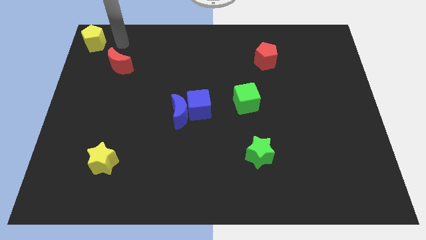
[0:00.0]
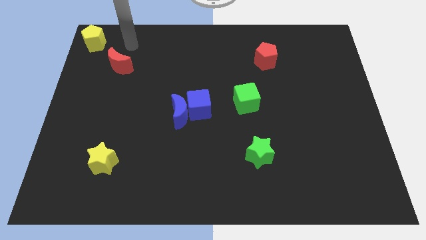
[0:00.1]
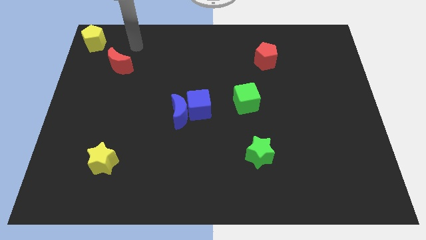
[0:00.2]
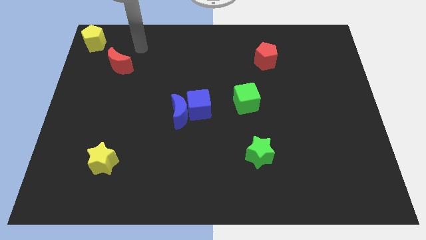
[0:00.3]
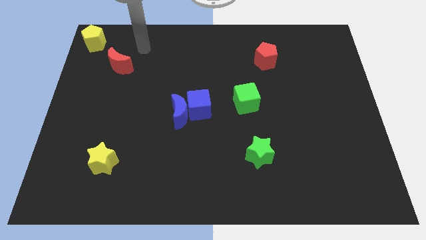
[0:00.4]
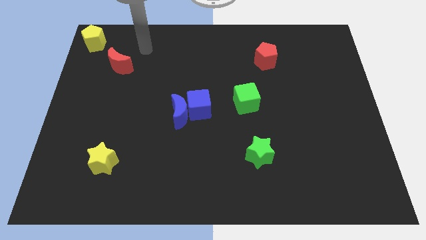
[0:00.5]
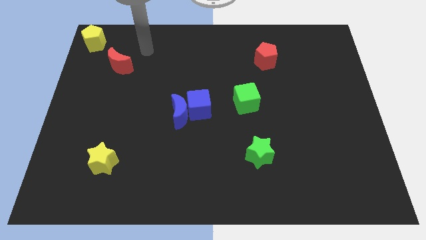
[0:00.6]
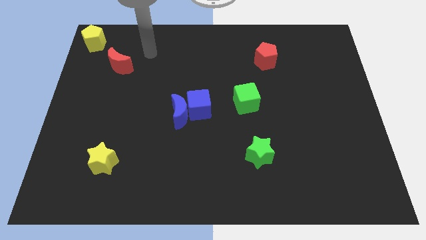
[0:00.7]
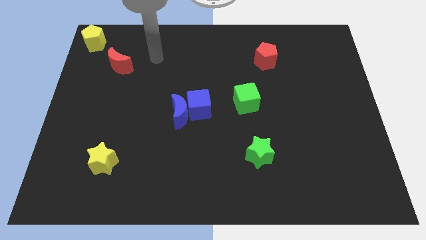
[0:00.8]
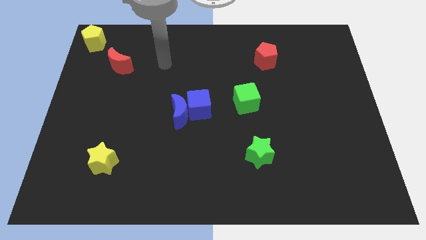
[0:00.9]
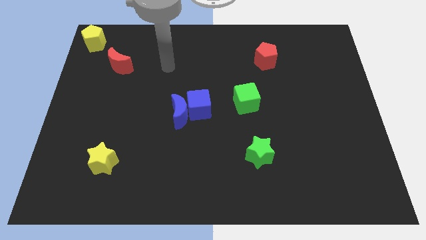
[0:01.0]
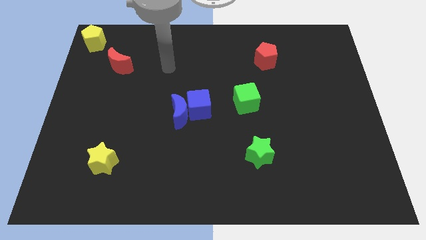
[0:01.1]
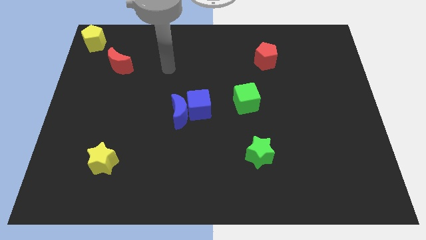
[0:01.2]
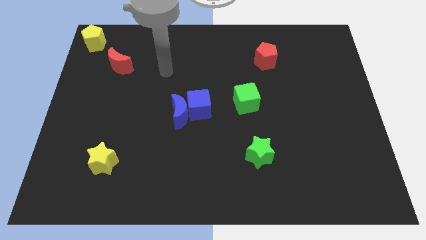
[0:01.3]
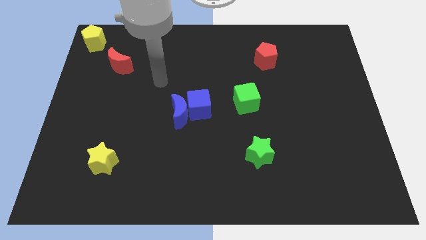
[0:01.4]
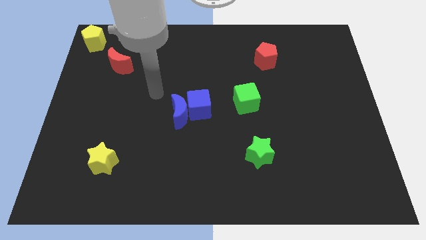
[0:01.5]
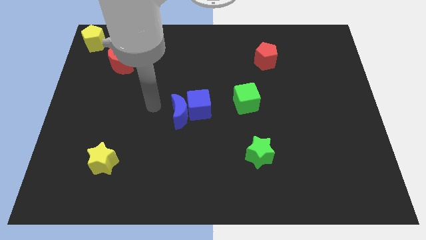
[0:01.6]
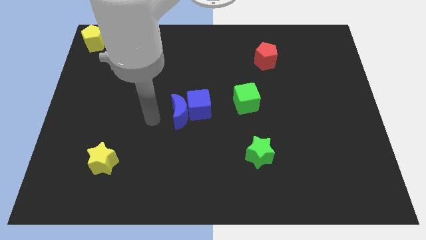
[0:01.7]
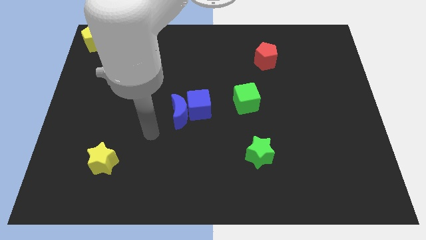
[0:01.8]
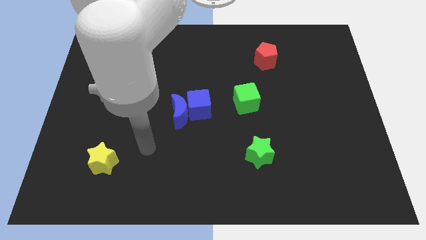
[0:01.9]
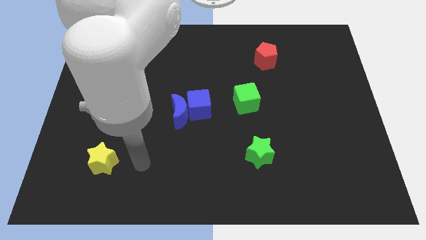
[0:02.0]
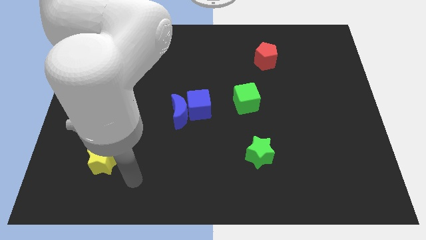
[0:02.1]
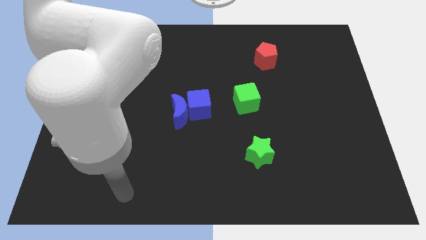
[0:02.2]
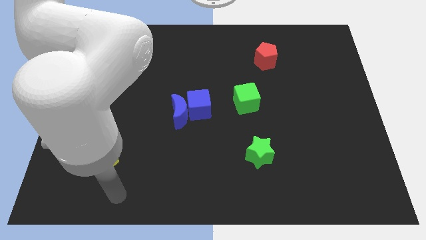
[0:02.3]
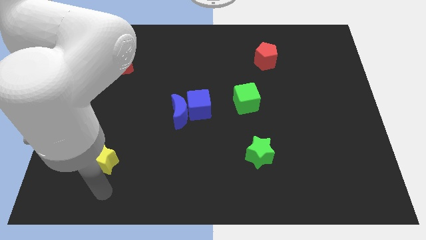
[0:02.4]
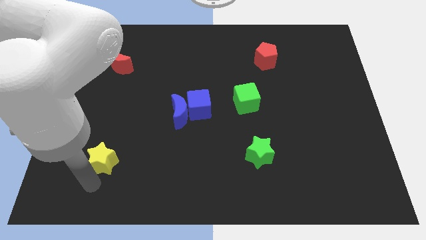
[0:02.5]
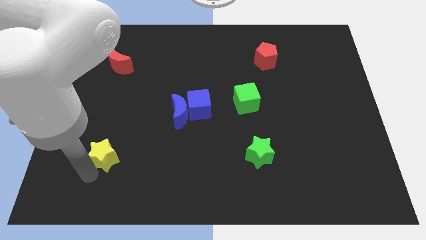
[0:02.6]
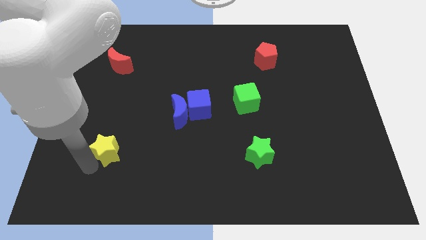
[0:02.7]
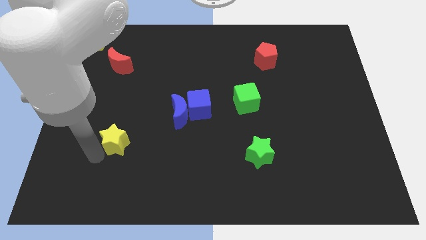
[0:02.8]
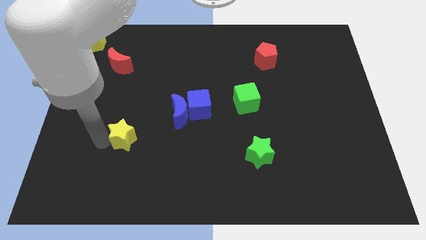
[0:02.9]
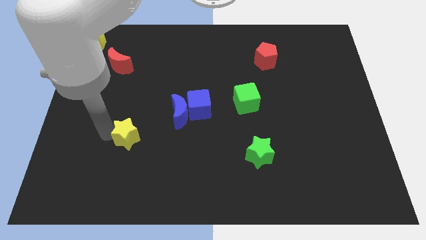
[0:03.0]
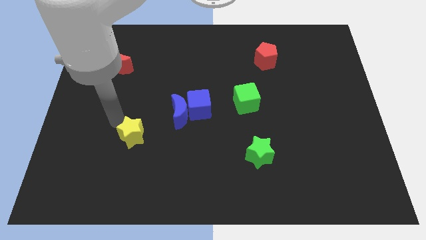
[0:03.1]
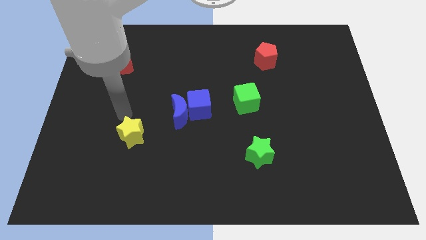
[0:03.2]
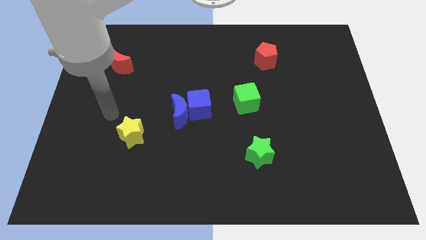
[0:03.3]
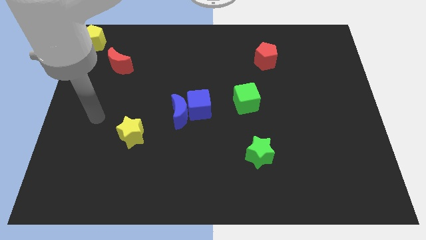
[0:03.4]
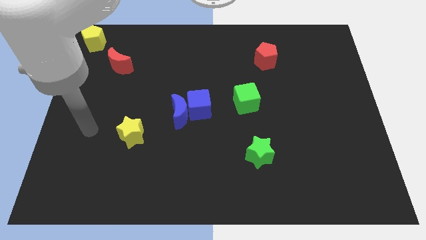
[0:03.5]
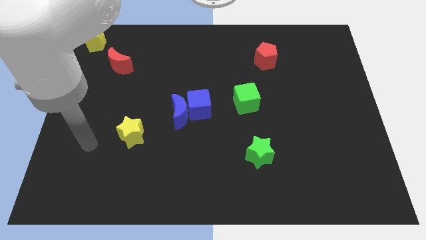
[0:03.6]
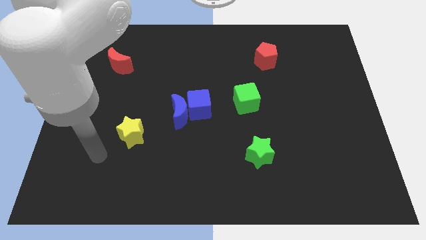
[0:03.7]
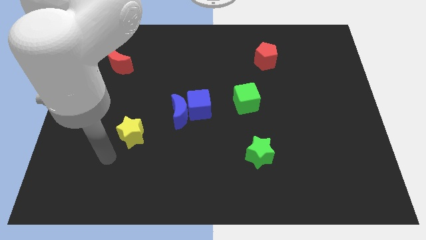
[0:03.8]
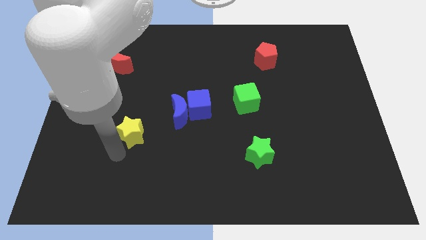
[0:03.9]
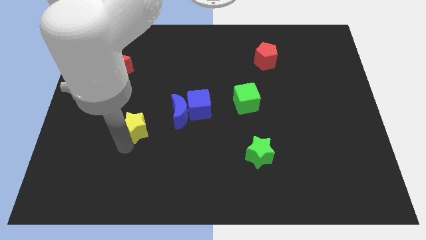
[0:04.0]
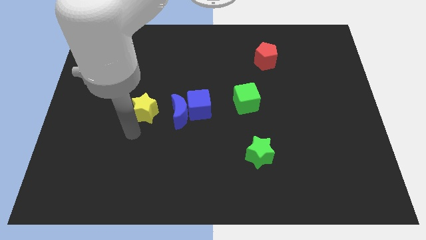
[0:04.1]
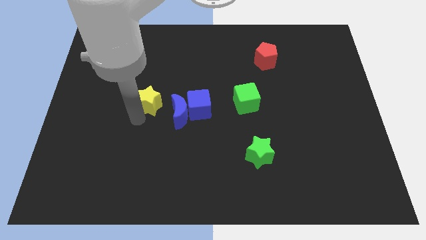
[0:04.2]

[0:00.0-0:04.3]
slide the yellow star to the left side of the blue blocks

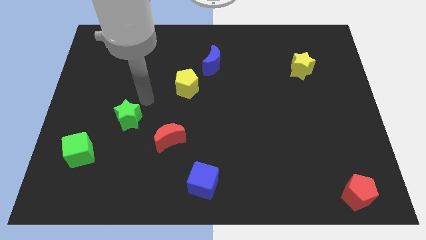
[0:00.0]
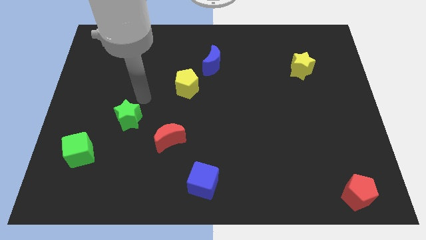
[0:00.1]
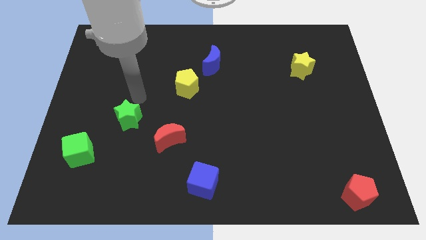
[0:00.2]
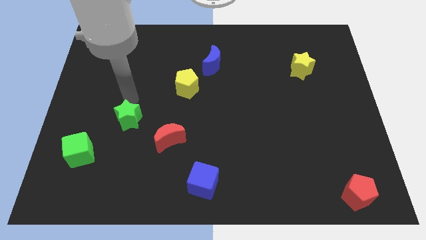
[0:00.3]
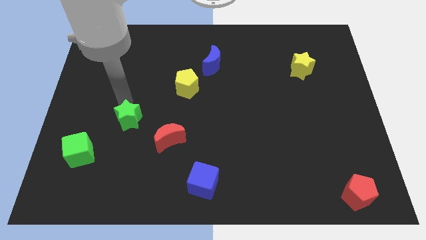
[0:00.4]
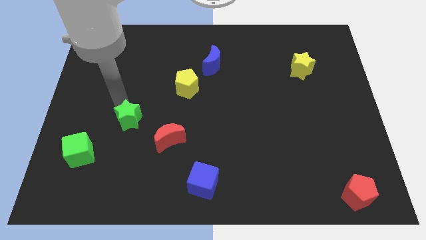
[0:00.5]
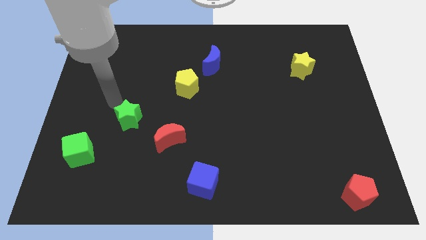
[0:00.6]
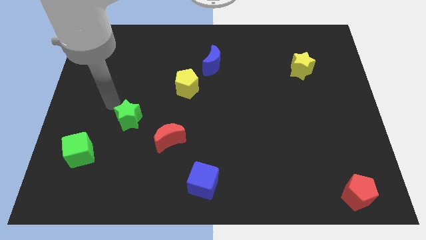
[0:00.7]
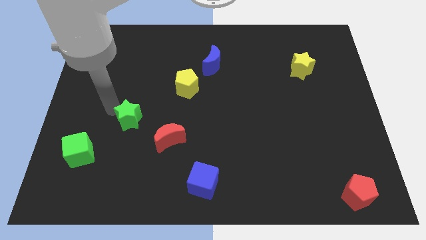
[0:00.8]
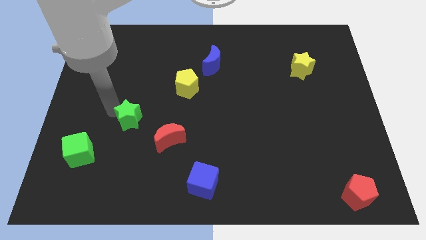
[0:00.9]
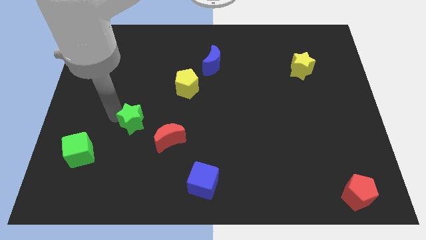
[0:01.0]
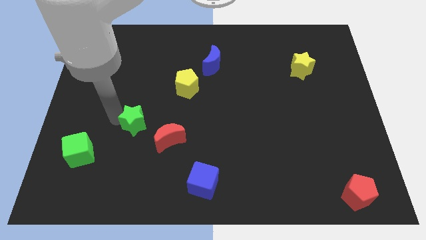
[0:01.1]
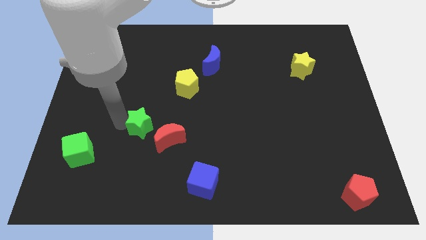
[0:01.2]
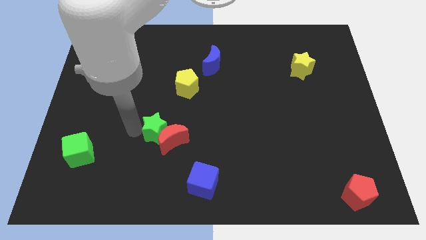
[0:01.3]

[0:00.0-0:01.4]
place the green star at the top left side of red crescent

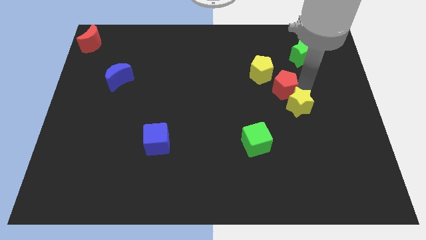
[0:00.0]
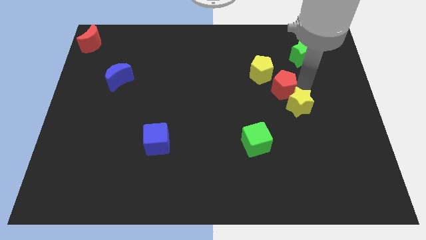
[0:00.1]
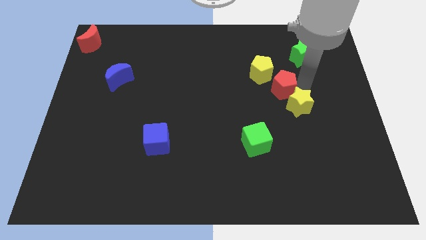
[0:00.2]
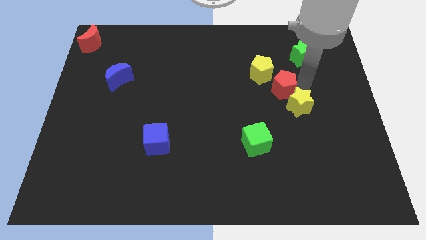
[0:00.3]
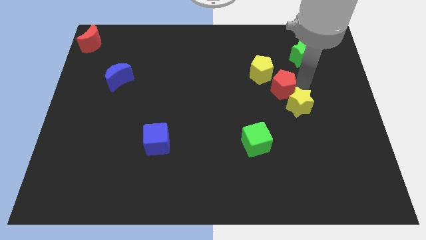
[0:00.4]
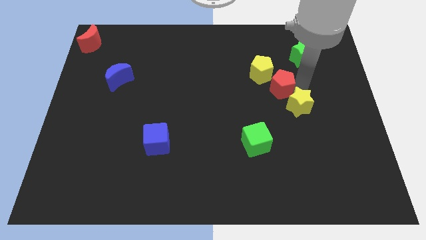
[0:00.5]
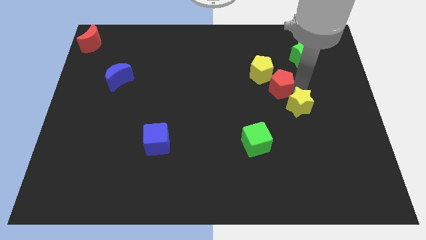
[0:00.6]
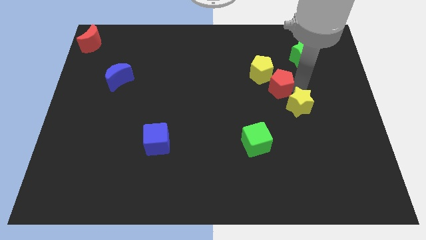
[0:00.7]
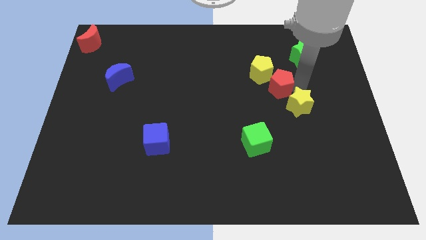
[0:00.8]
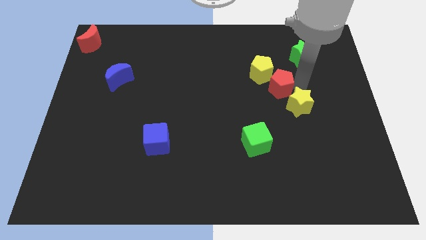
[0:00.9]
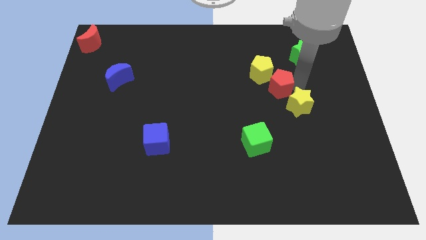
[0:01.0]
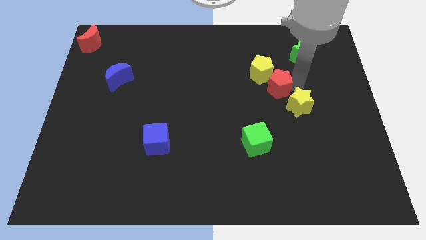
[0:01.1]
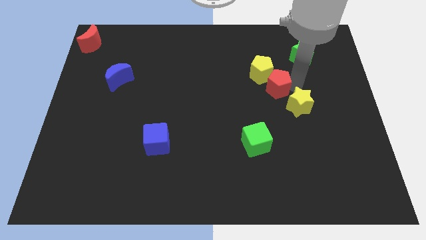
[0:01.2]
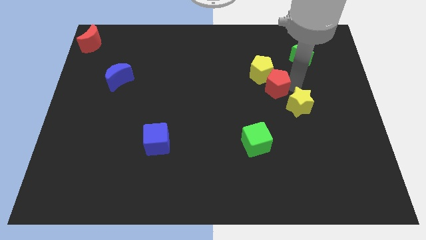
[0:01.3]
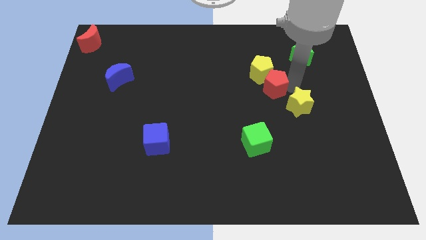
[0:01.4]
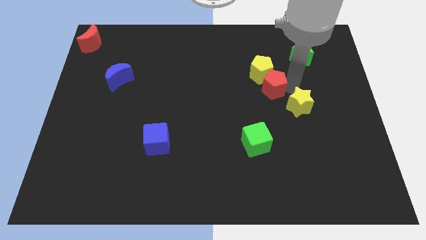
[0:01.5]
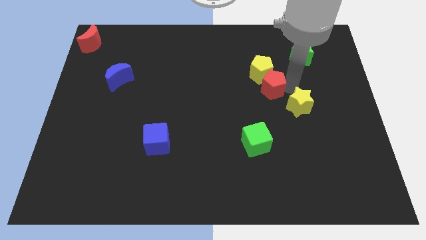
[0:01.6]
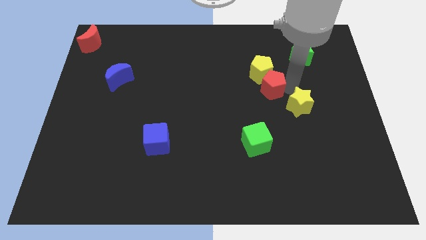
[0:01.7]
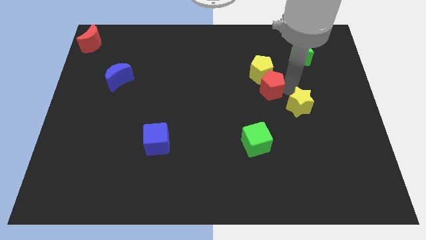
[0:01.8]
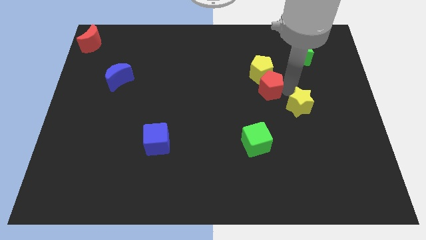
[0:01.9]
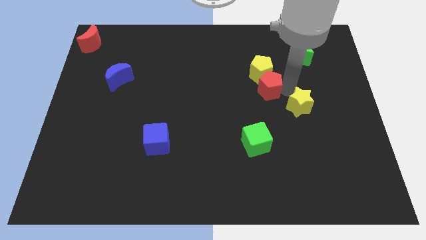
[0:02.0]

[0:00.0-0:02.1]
place the red pentagon in between two yellow blocks which are in diagonal position

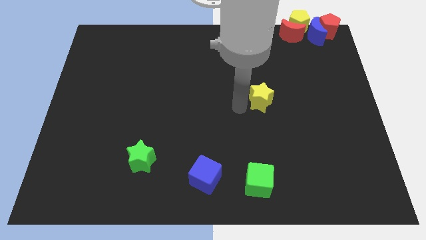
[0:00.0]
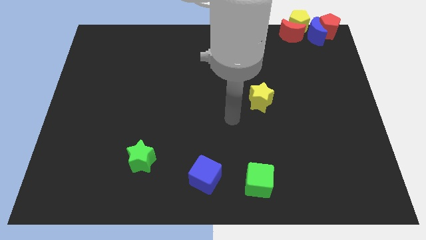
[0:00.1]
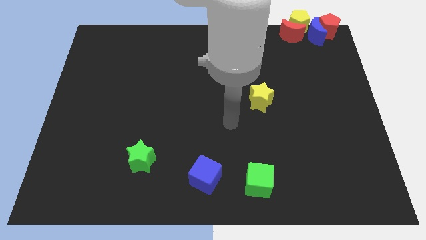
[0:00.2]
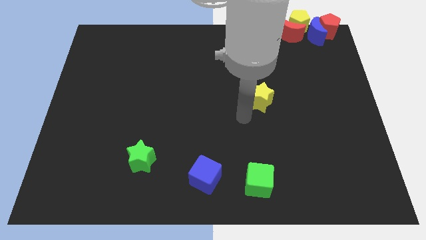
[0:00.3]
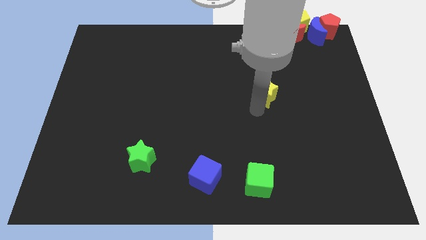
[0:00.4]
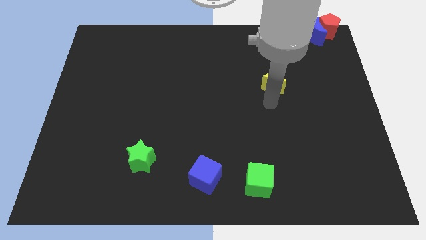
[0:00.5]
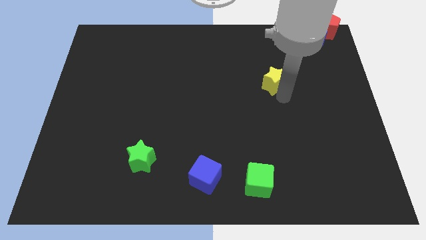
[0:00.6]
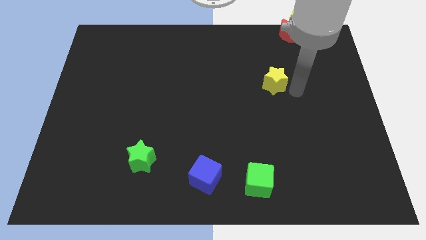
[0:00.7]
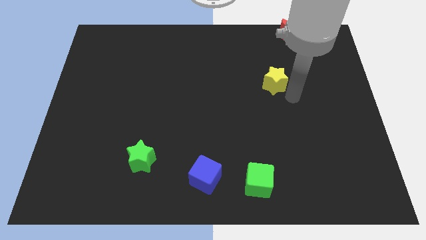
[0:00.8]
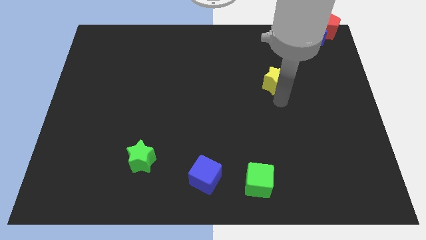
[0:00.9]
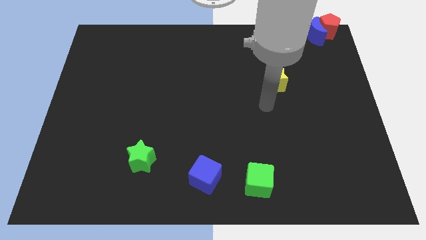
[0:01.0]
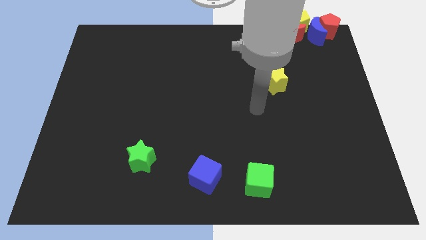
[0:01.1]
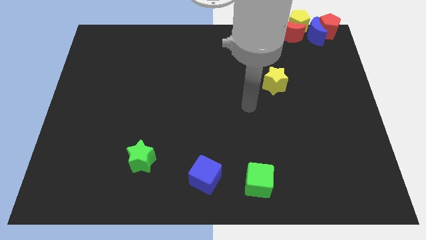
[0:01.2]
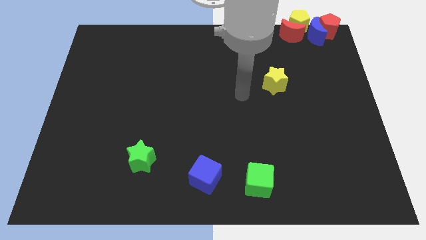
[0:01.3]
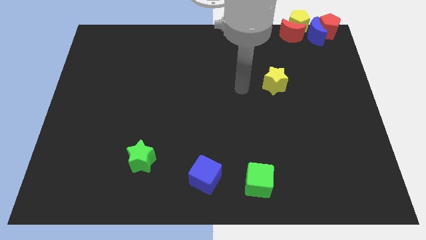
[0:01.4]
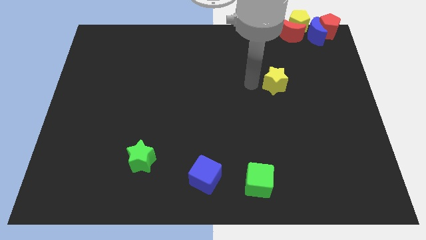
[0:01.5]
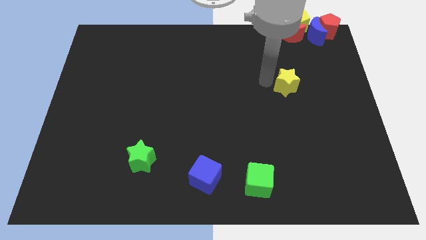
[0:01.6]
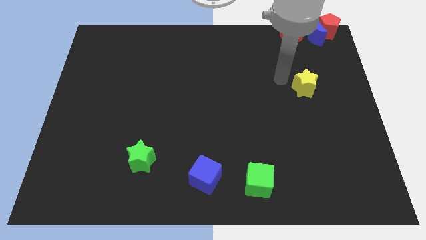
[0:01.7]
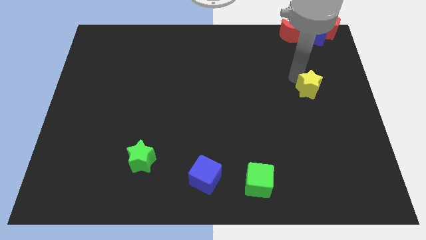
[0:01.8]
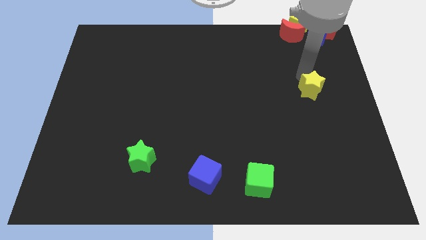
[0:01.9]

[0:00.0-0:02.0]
drag yellow star towards top right side of the board
